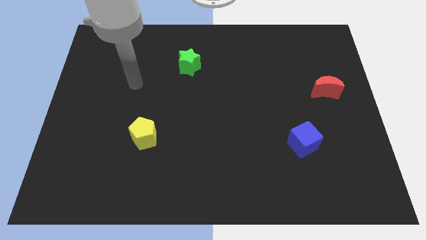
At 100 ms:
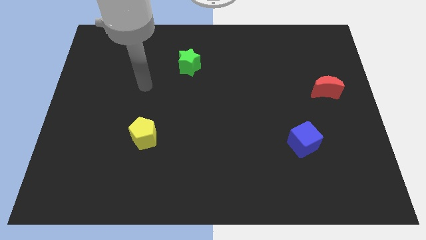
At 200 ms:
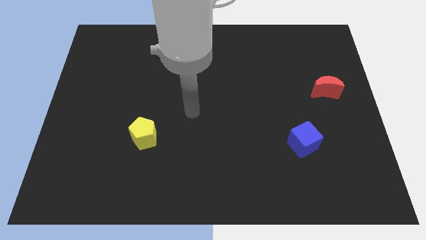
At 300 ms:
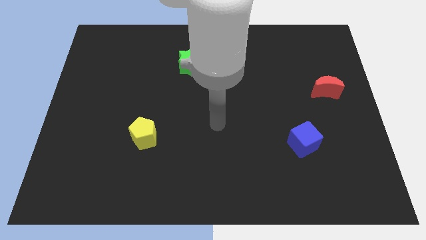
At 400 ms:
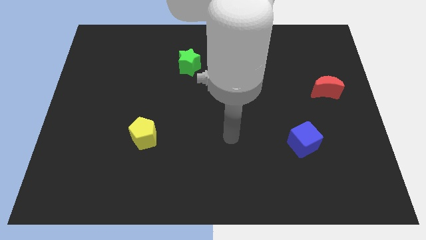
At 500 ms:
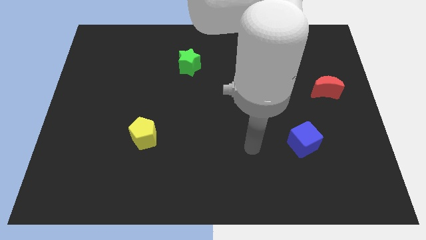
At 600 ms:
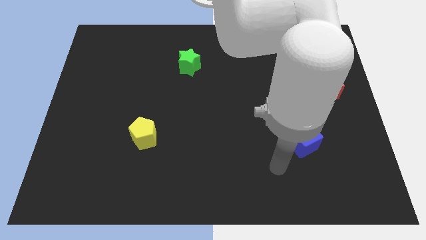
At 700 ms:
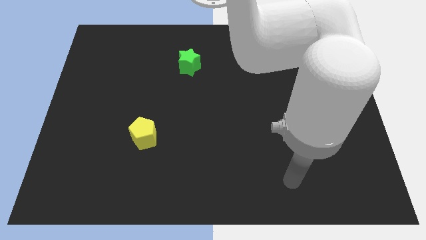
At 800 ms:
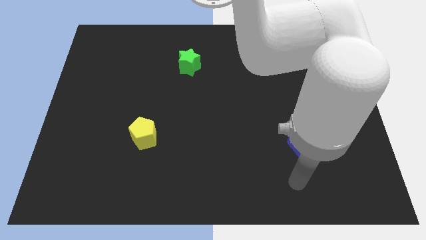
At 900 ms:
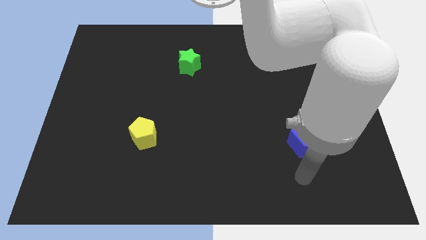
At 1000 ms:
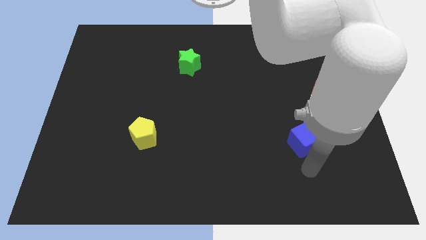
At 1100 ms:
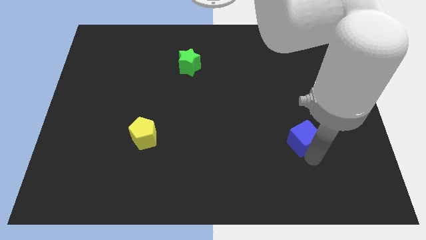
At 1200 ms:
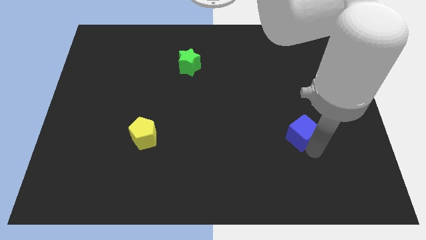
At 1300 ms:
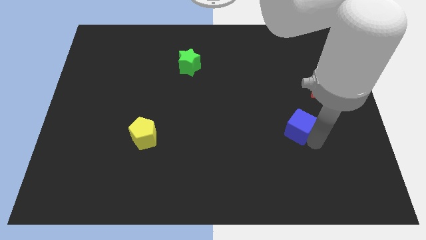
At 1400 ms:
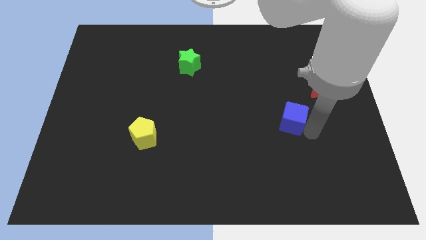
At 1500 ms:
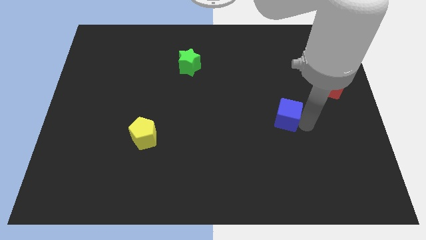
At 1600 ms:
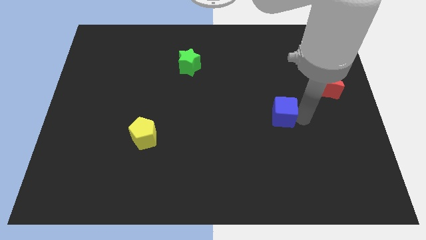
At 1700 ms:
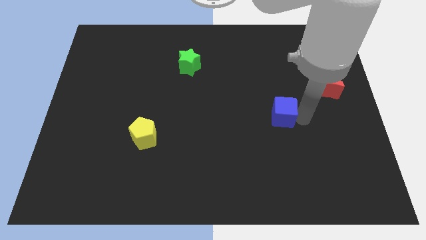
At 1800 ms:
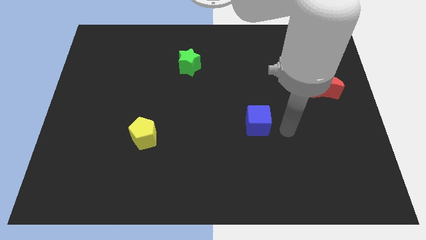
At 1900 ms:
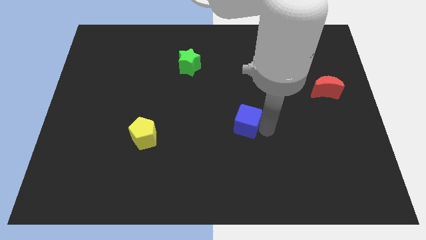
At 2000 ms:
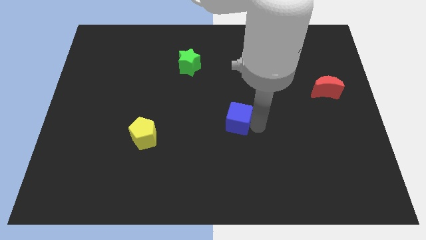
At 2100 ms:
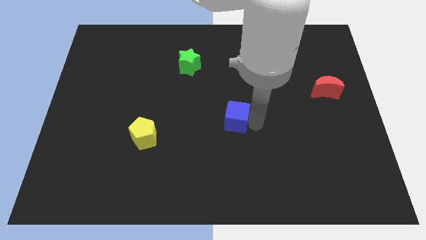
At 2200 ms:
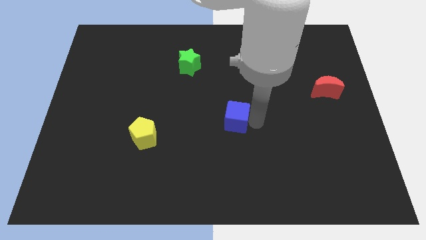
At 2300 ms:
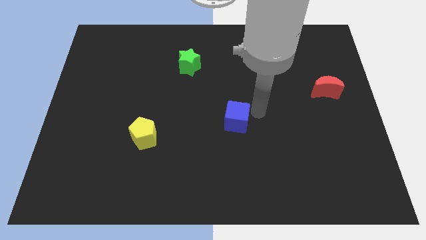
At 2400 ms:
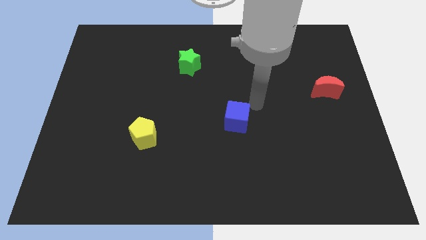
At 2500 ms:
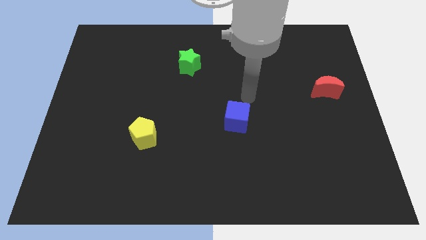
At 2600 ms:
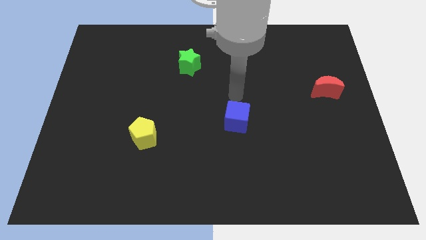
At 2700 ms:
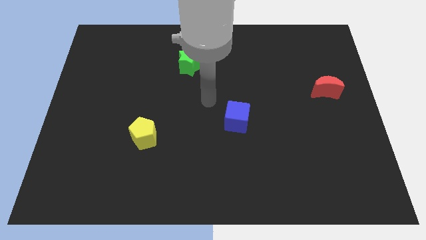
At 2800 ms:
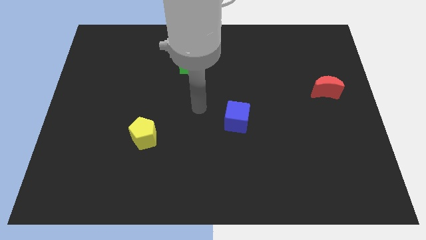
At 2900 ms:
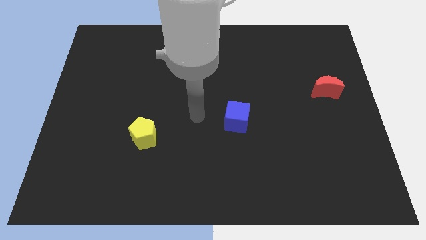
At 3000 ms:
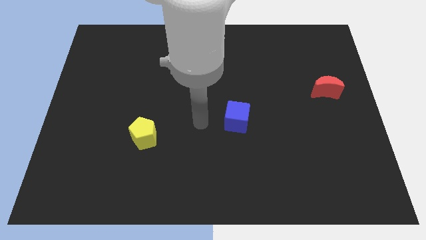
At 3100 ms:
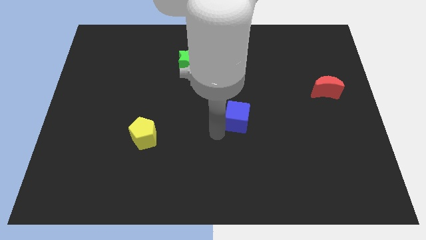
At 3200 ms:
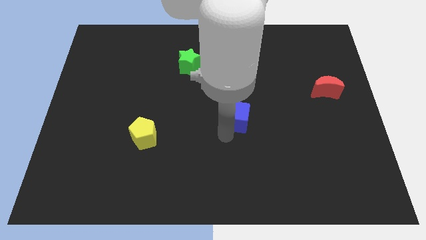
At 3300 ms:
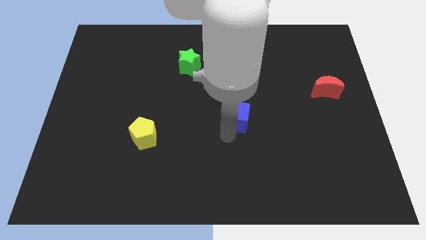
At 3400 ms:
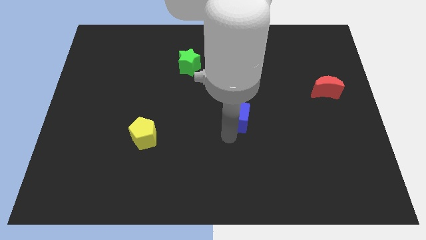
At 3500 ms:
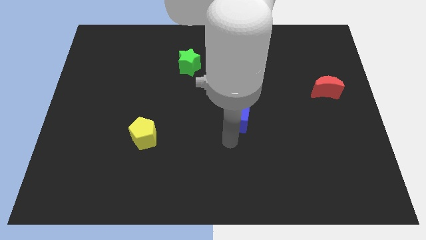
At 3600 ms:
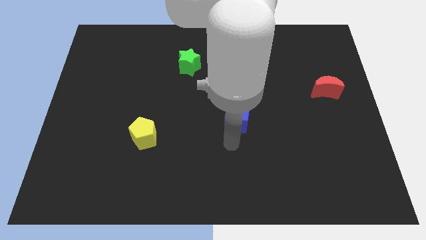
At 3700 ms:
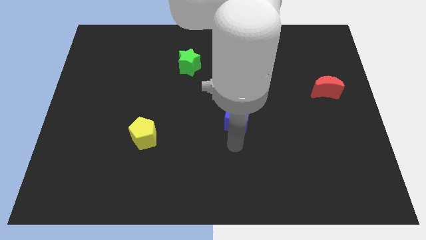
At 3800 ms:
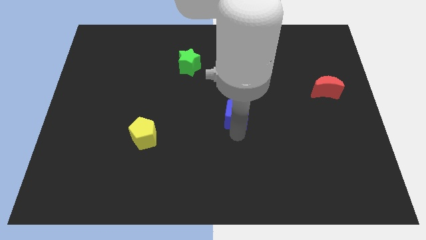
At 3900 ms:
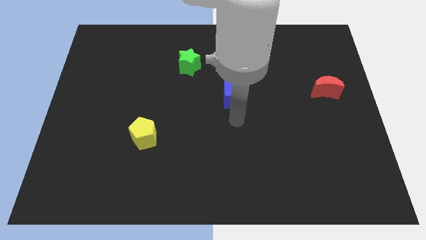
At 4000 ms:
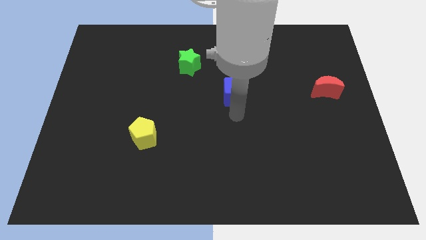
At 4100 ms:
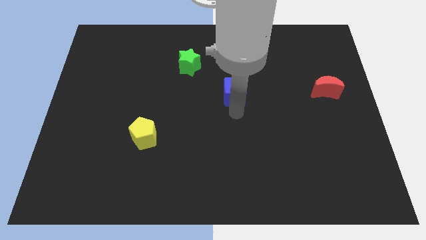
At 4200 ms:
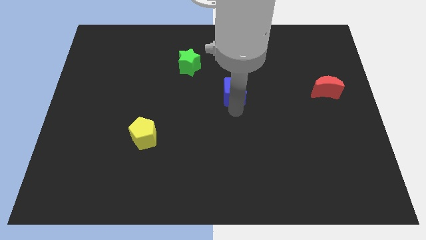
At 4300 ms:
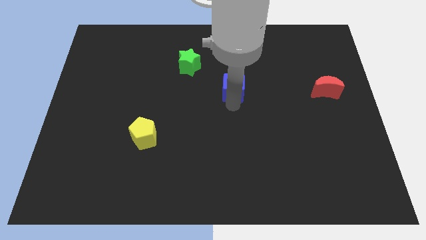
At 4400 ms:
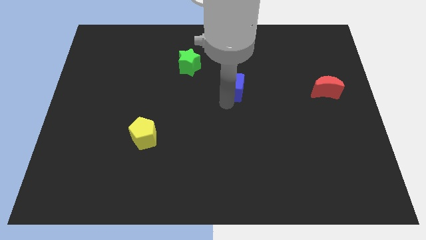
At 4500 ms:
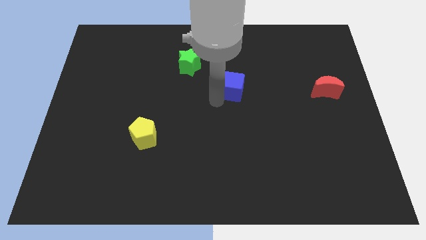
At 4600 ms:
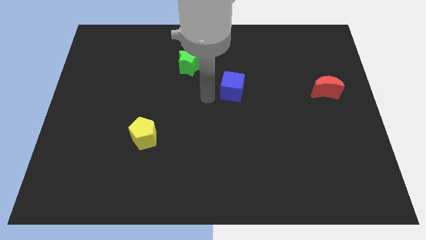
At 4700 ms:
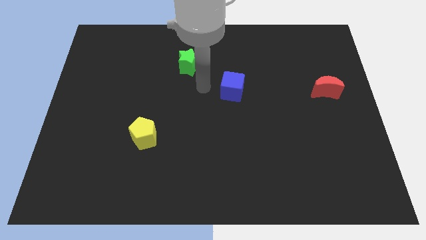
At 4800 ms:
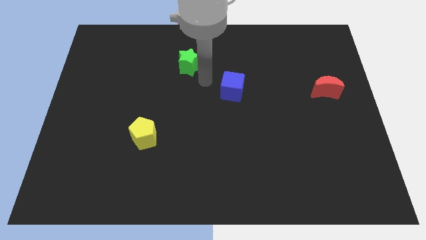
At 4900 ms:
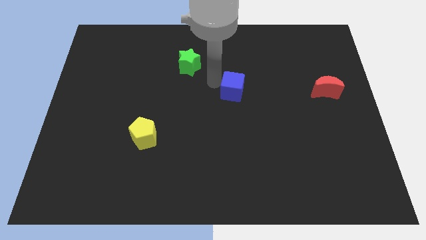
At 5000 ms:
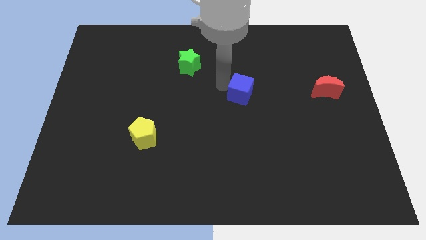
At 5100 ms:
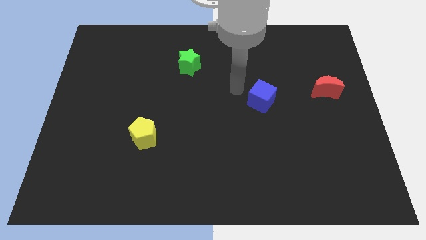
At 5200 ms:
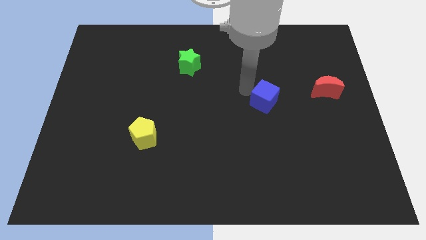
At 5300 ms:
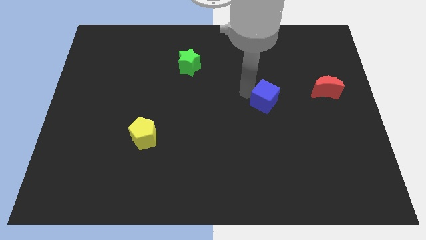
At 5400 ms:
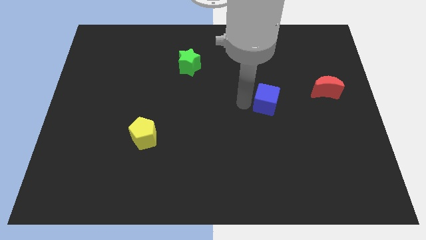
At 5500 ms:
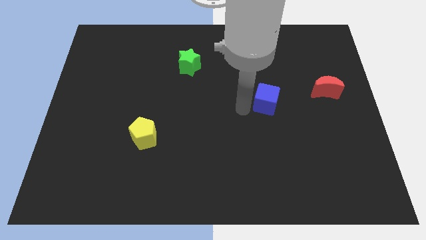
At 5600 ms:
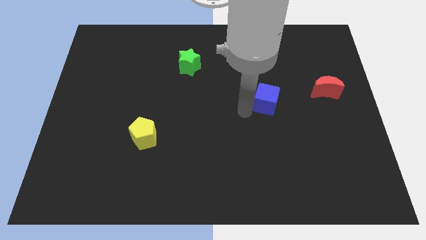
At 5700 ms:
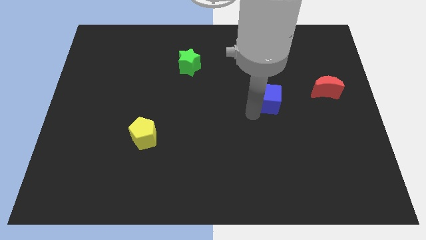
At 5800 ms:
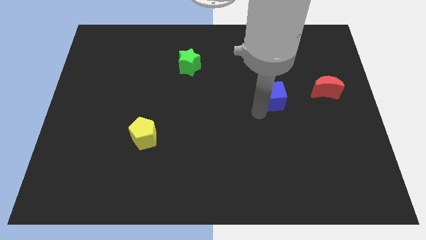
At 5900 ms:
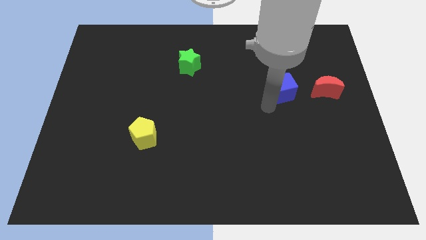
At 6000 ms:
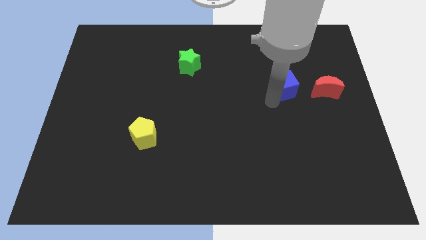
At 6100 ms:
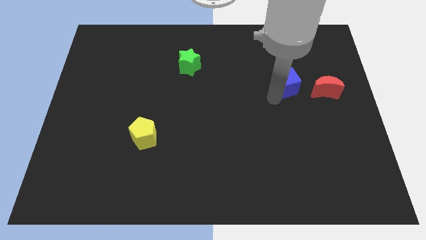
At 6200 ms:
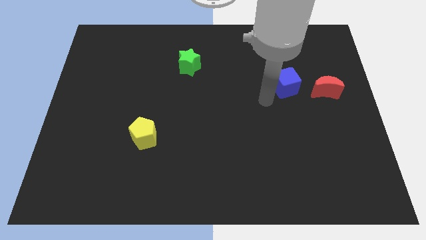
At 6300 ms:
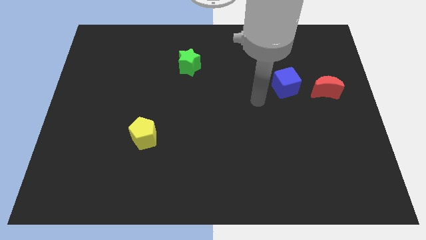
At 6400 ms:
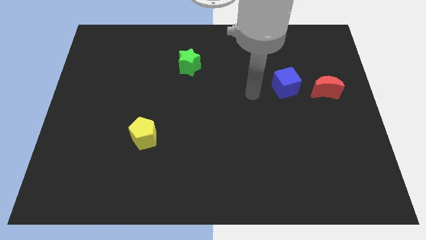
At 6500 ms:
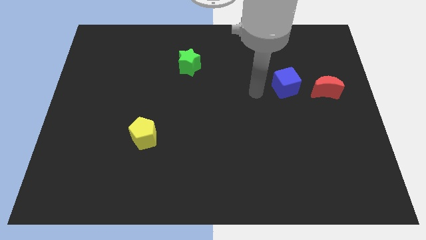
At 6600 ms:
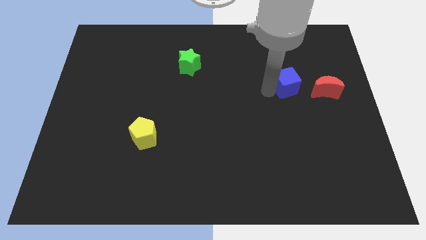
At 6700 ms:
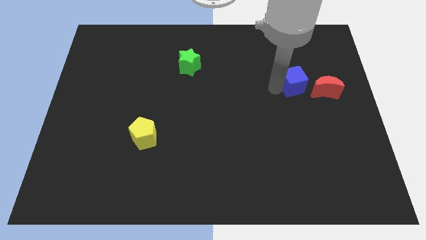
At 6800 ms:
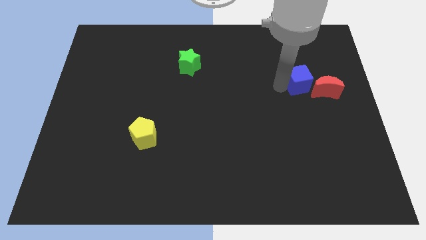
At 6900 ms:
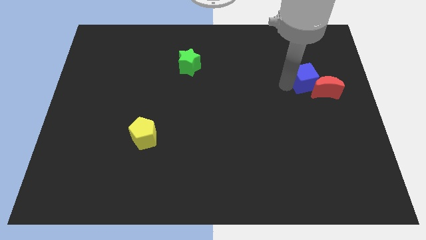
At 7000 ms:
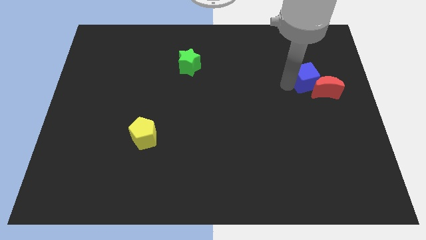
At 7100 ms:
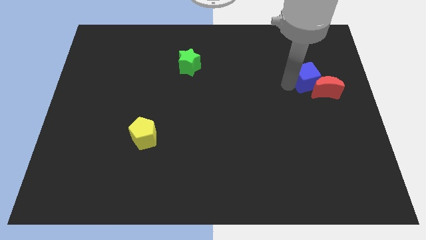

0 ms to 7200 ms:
slide the blue cube next to the red block

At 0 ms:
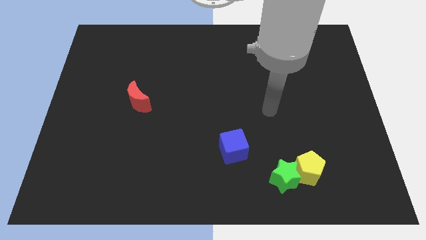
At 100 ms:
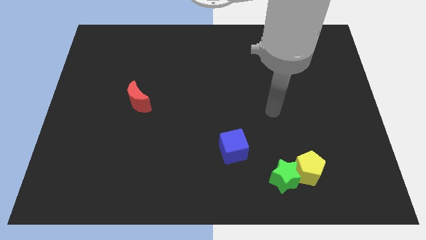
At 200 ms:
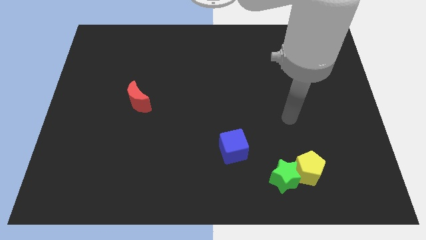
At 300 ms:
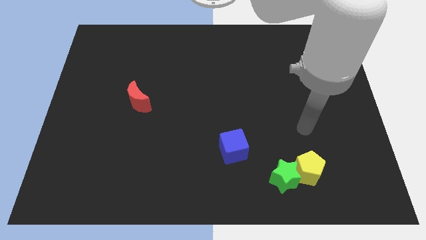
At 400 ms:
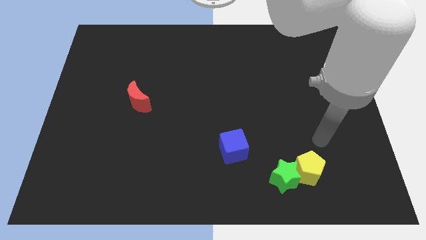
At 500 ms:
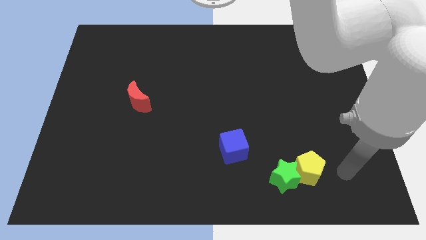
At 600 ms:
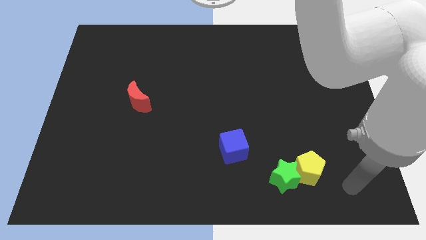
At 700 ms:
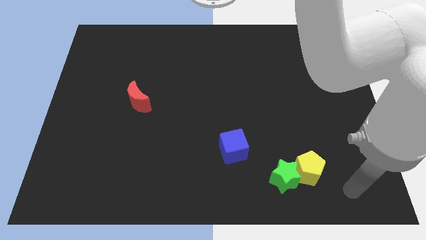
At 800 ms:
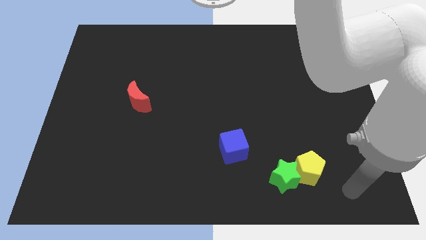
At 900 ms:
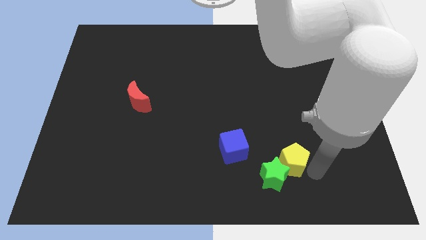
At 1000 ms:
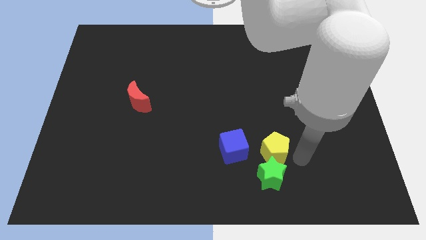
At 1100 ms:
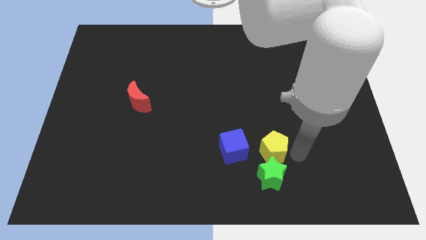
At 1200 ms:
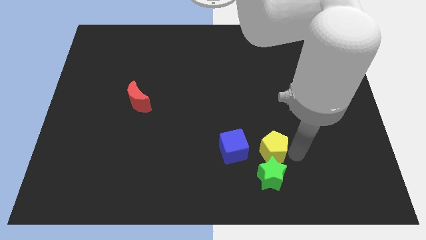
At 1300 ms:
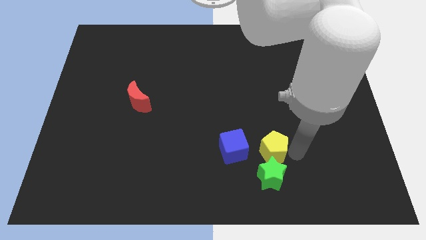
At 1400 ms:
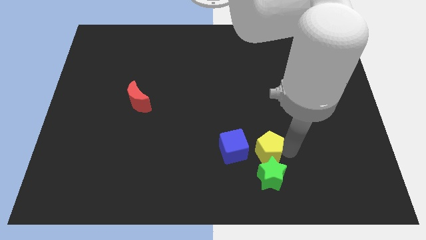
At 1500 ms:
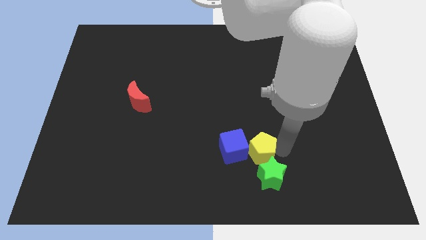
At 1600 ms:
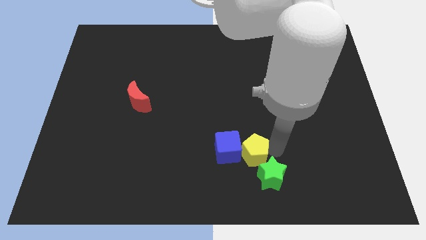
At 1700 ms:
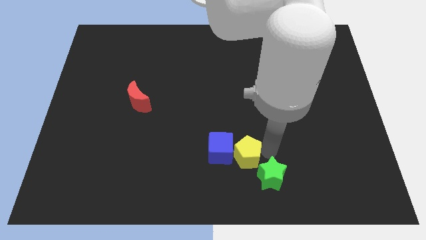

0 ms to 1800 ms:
slide the yellow block next to the blue cube
